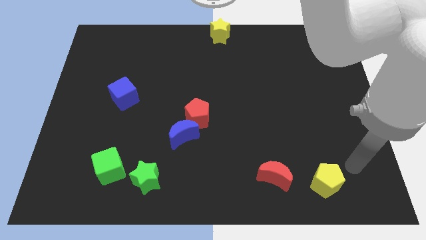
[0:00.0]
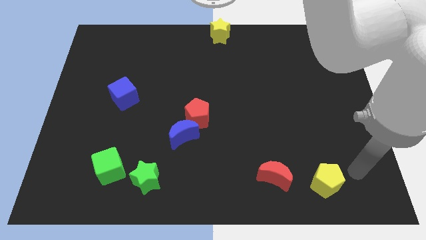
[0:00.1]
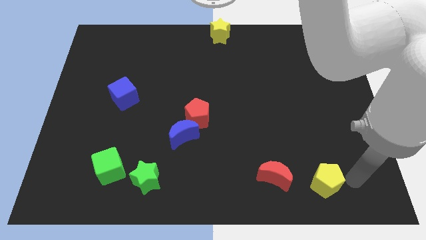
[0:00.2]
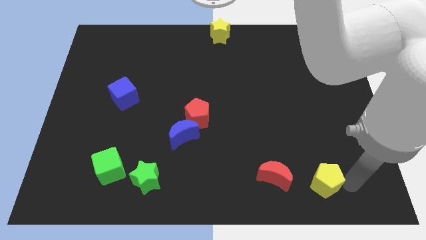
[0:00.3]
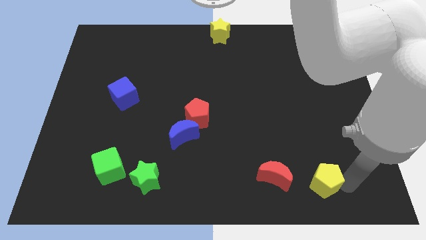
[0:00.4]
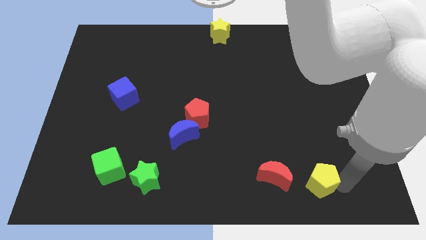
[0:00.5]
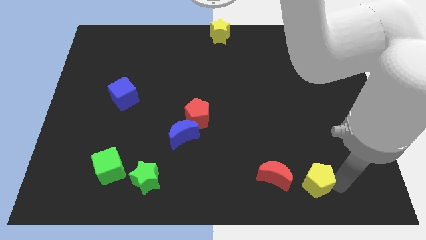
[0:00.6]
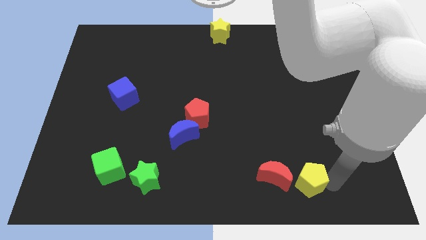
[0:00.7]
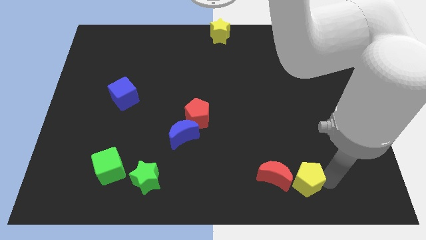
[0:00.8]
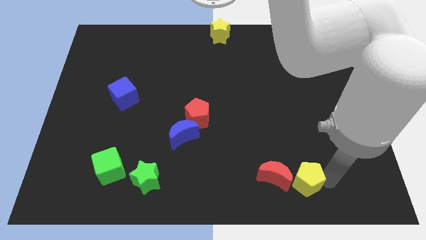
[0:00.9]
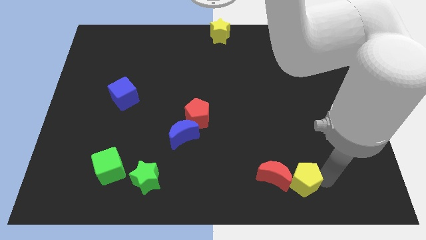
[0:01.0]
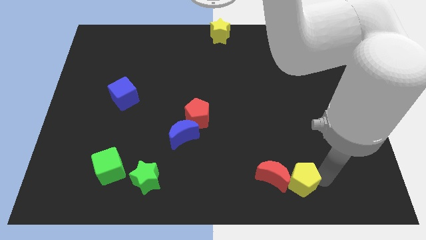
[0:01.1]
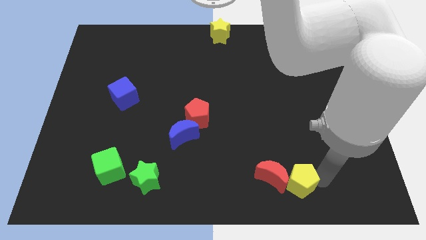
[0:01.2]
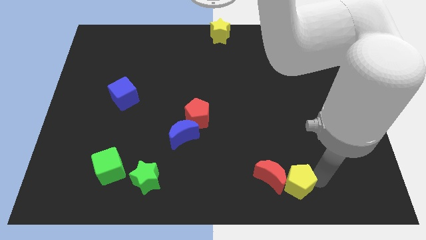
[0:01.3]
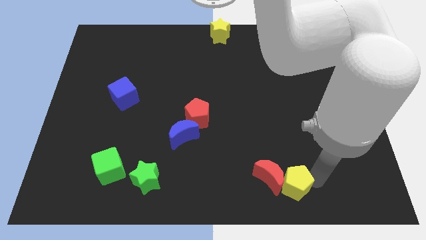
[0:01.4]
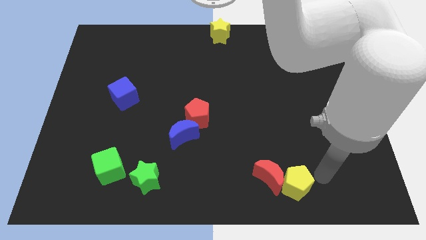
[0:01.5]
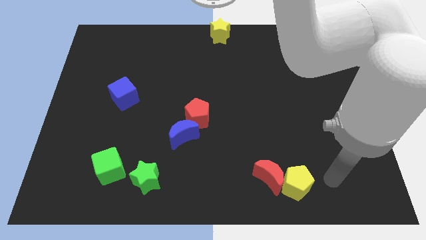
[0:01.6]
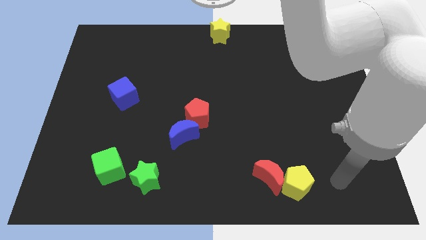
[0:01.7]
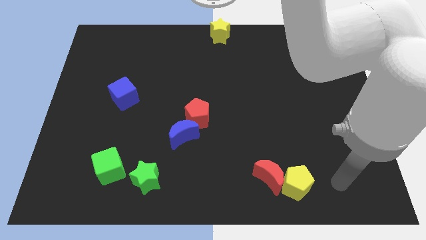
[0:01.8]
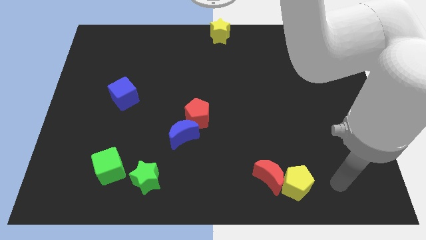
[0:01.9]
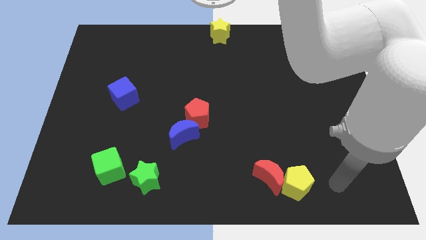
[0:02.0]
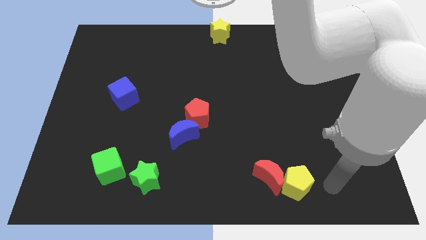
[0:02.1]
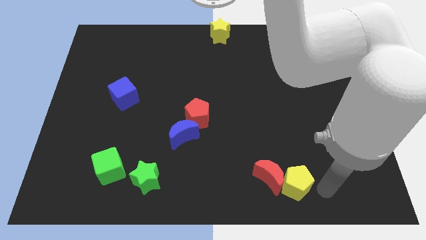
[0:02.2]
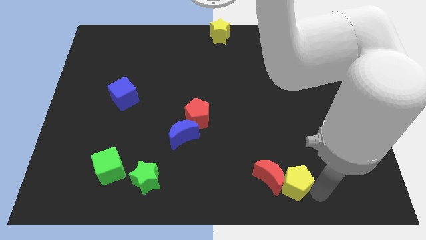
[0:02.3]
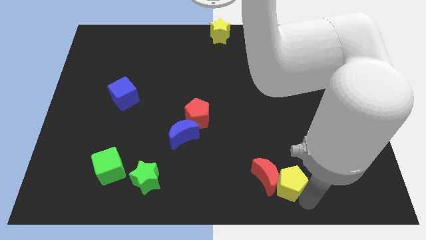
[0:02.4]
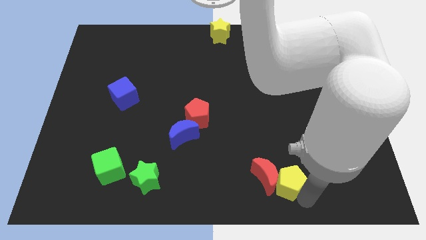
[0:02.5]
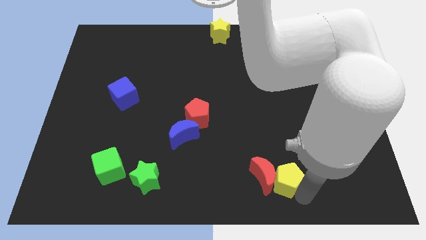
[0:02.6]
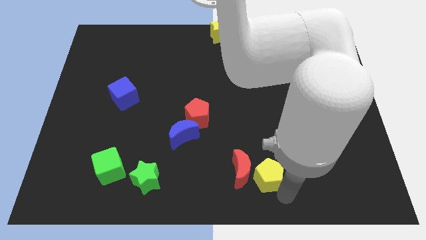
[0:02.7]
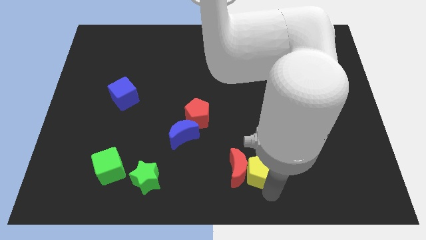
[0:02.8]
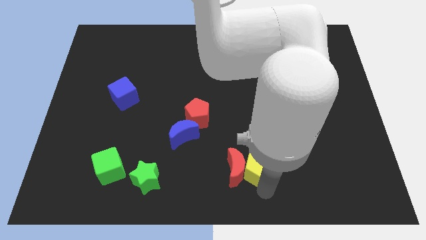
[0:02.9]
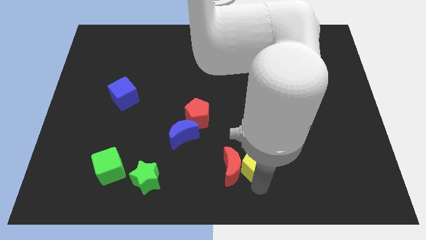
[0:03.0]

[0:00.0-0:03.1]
move yellow pentagon along with red crescent towards blue crescent

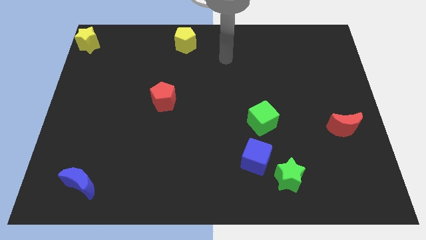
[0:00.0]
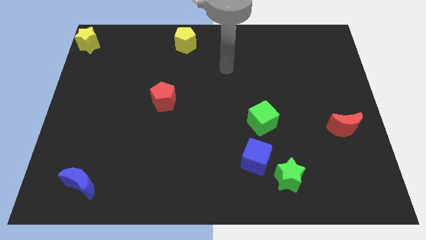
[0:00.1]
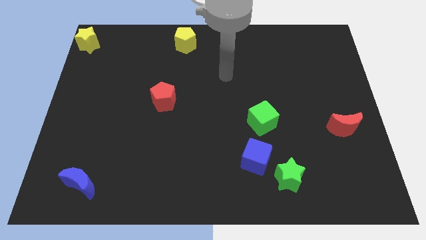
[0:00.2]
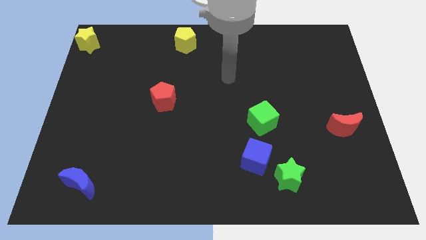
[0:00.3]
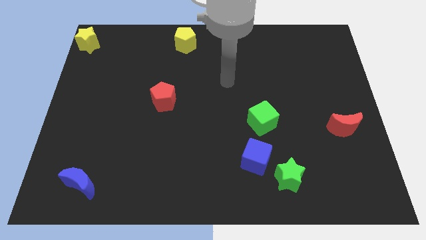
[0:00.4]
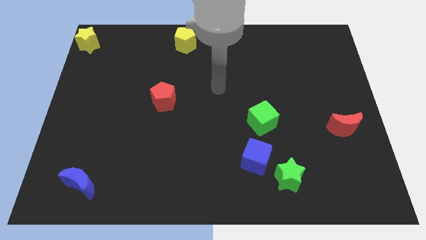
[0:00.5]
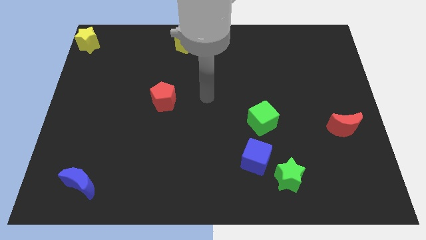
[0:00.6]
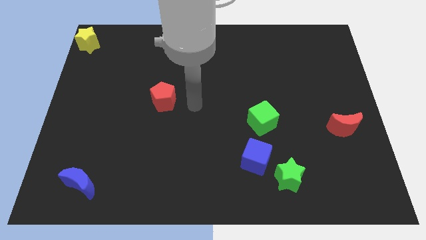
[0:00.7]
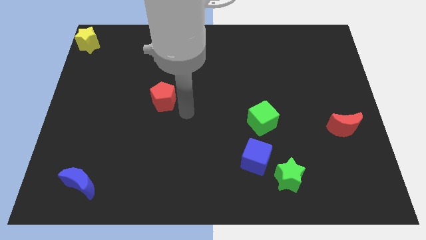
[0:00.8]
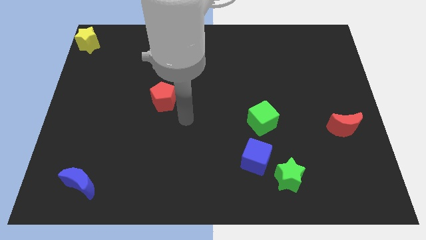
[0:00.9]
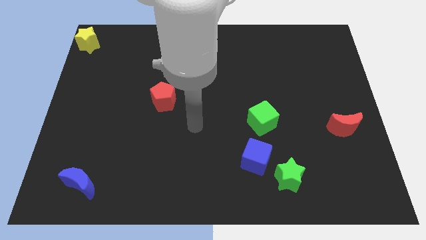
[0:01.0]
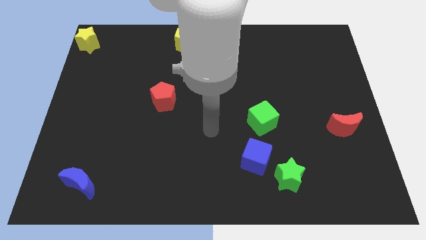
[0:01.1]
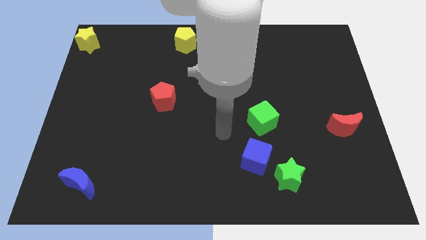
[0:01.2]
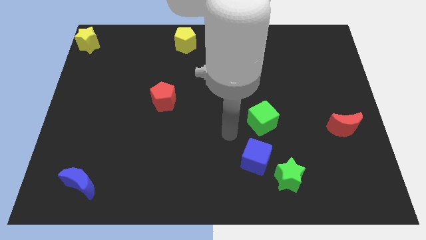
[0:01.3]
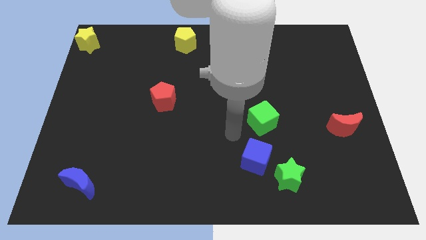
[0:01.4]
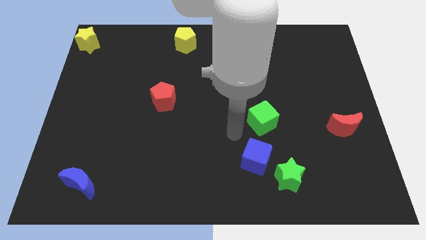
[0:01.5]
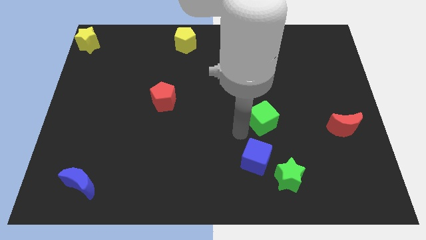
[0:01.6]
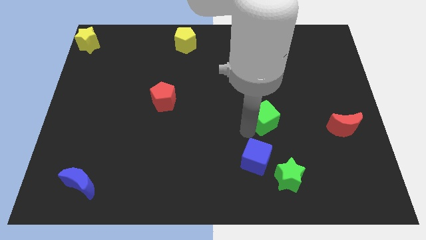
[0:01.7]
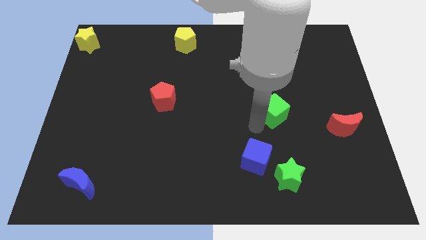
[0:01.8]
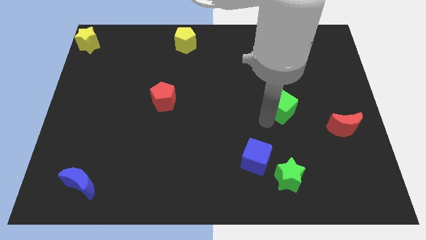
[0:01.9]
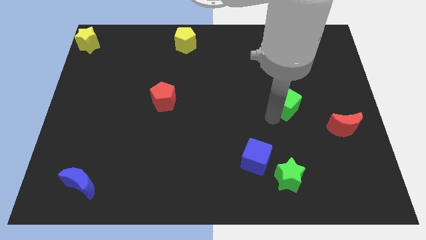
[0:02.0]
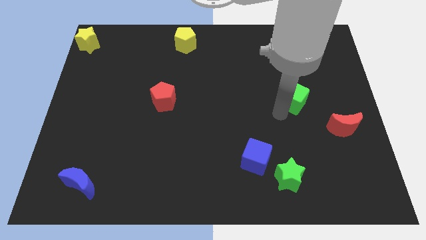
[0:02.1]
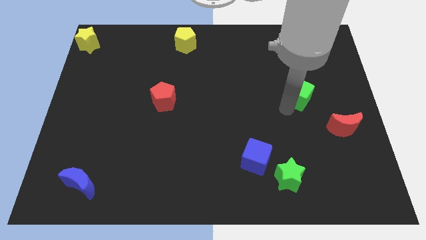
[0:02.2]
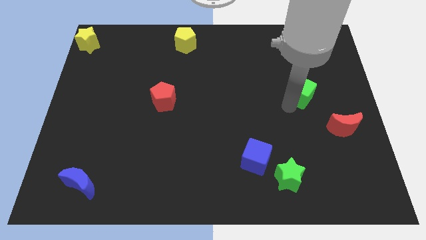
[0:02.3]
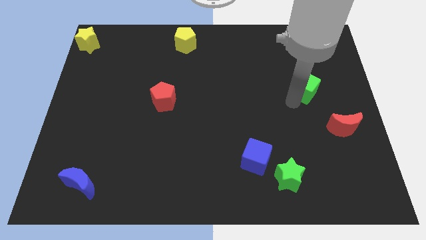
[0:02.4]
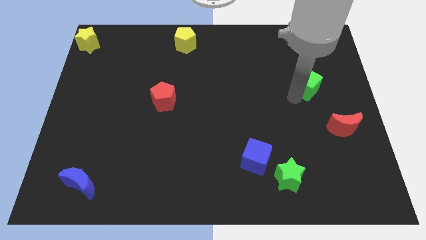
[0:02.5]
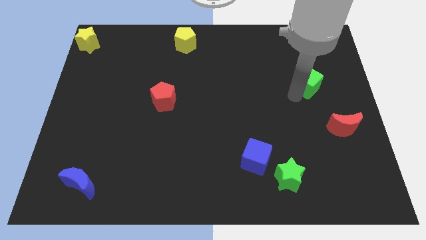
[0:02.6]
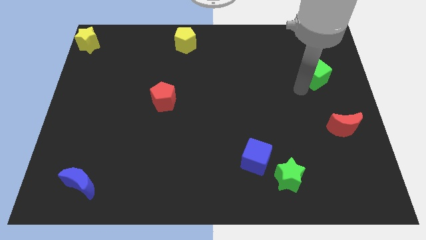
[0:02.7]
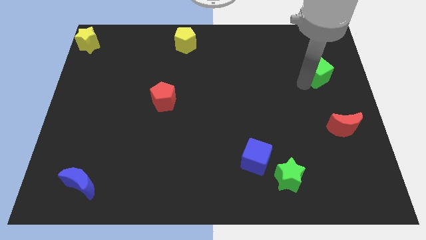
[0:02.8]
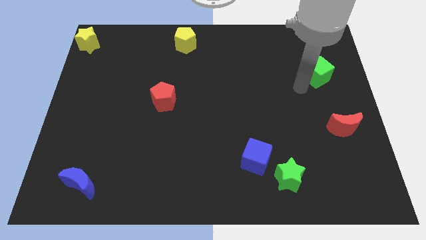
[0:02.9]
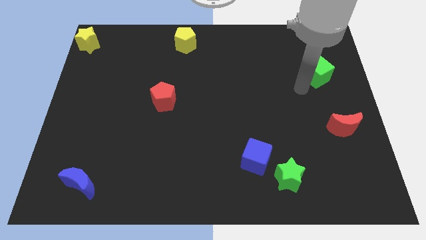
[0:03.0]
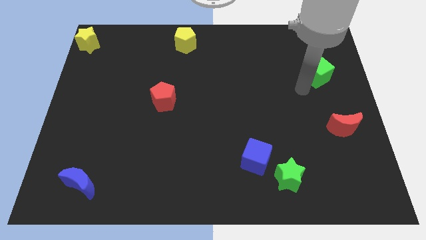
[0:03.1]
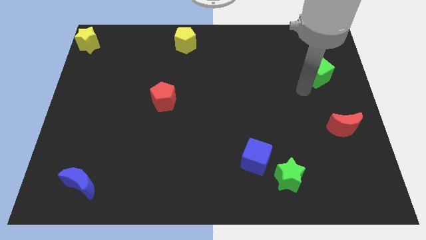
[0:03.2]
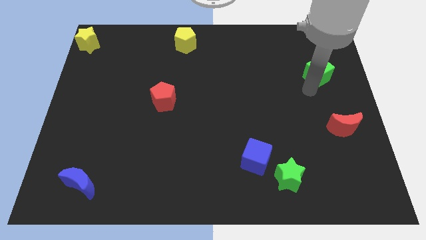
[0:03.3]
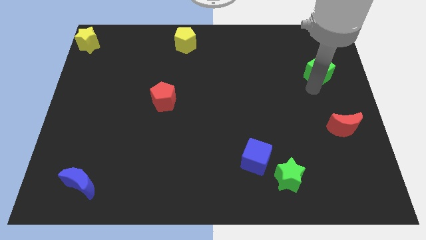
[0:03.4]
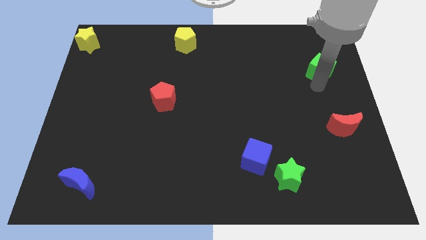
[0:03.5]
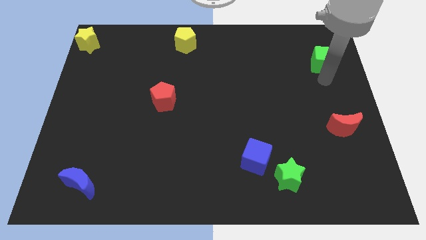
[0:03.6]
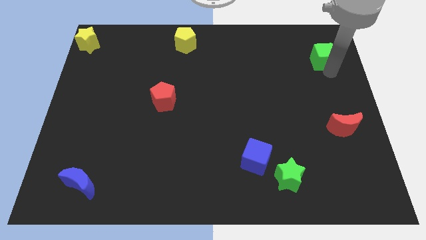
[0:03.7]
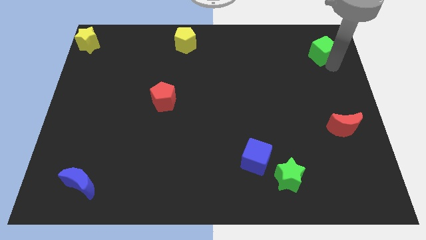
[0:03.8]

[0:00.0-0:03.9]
move the green cube vertically above the red moon

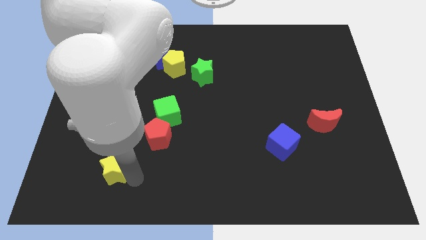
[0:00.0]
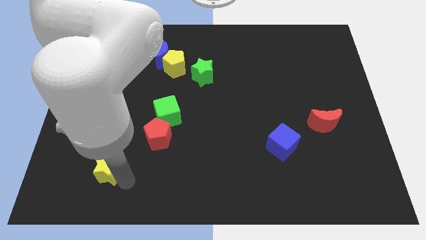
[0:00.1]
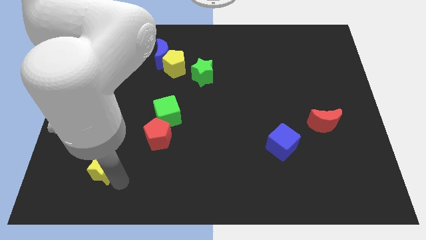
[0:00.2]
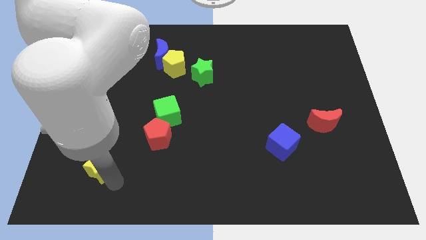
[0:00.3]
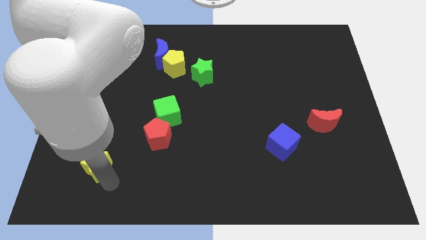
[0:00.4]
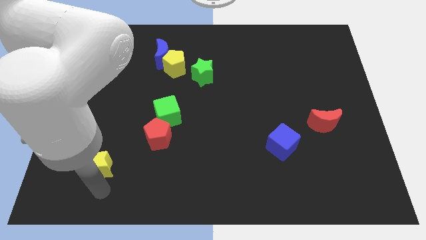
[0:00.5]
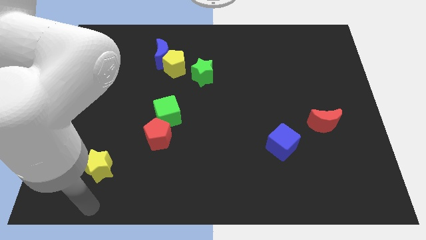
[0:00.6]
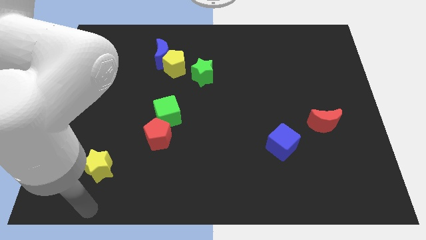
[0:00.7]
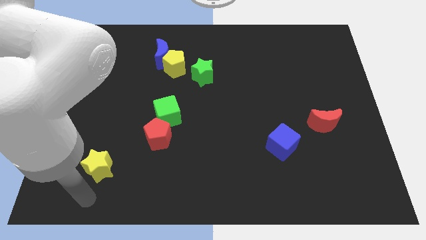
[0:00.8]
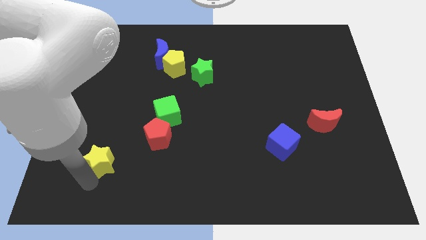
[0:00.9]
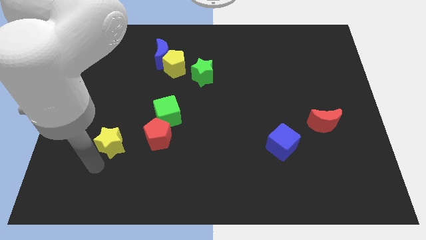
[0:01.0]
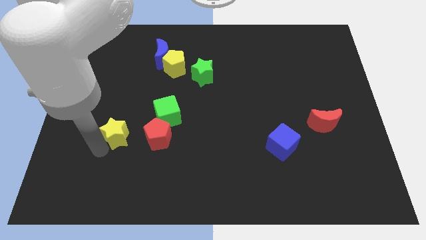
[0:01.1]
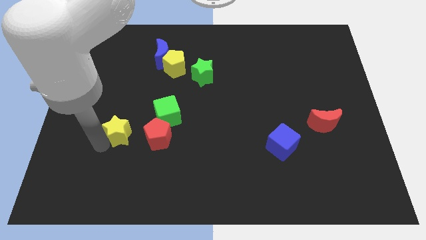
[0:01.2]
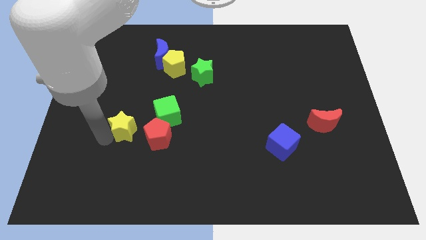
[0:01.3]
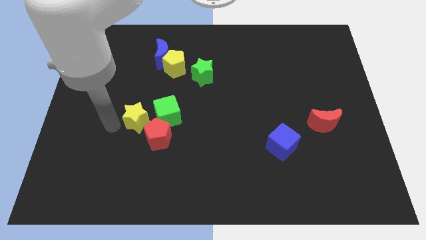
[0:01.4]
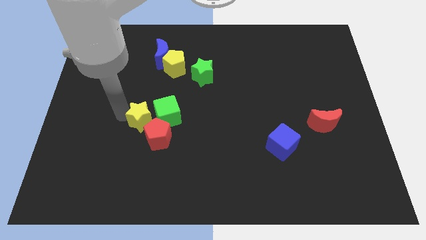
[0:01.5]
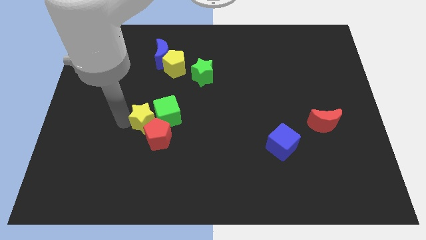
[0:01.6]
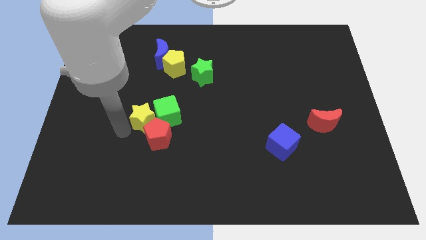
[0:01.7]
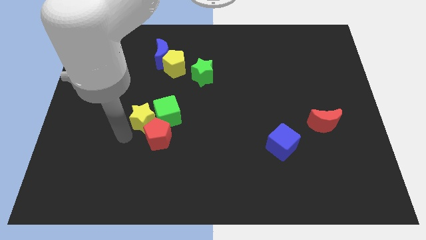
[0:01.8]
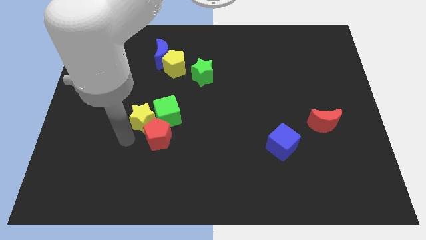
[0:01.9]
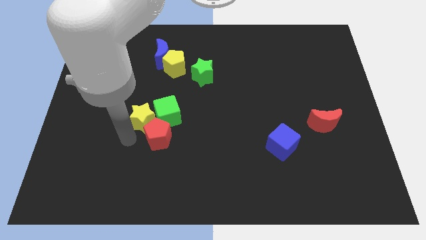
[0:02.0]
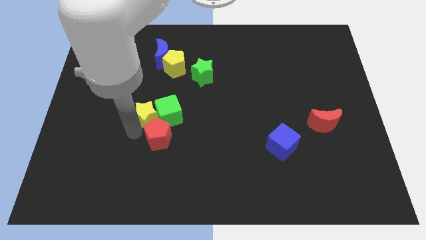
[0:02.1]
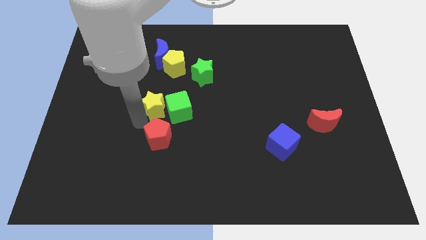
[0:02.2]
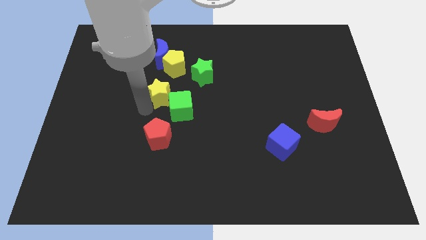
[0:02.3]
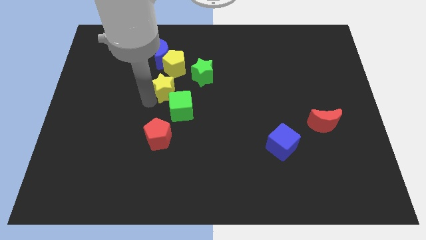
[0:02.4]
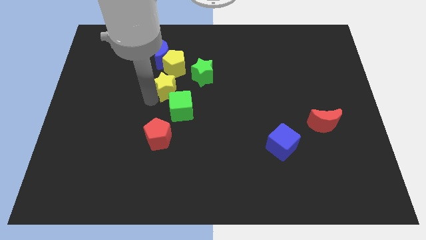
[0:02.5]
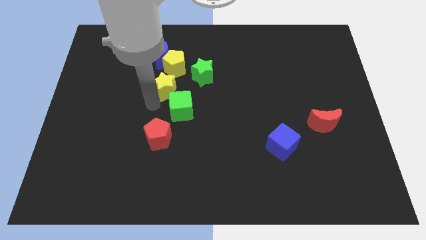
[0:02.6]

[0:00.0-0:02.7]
move the yellow star close to the yellow pentagon
